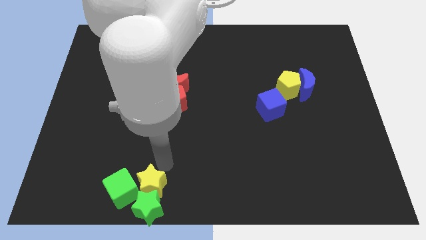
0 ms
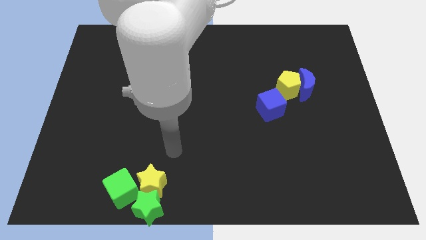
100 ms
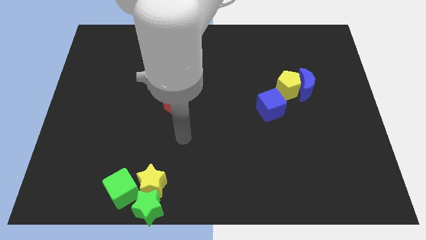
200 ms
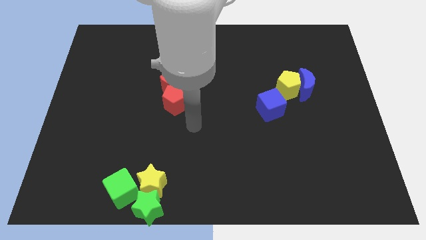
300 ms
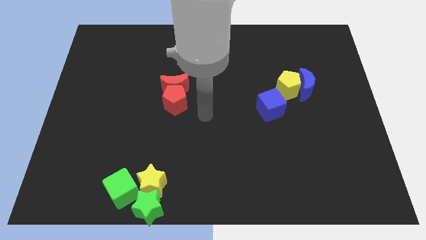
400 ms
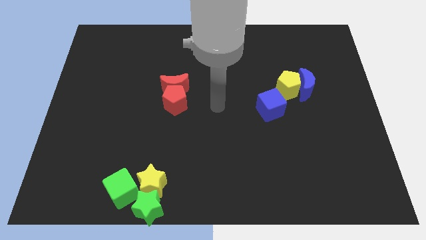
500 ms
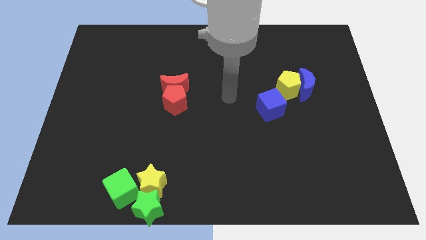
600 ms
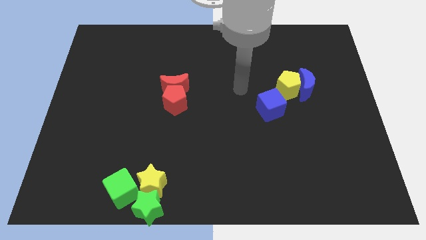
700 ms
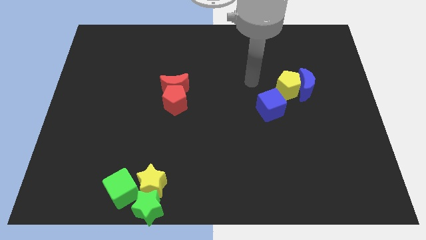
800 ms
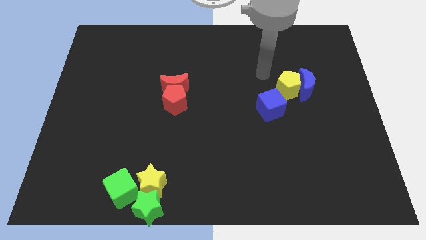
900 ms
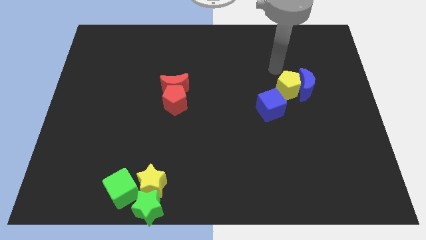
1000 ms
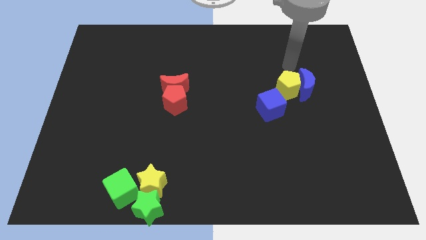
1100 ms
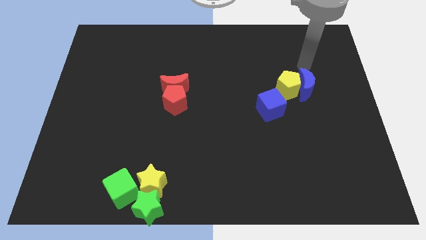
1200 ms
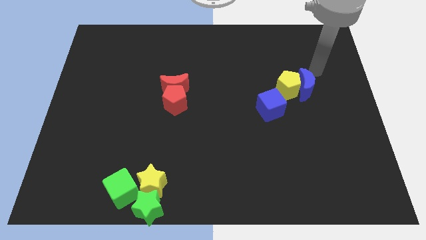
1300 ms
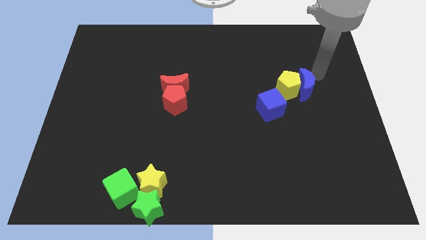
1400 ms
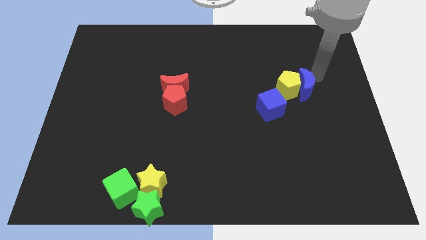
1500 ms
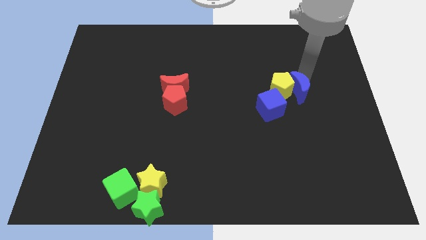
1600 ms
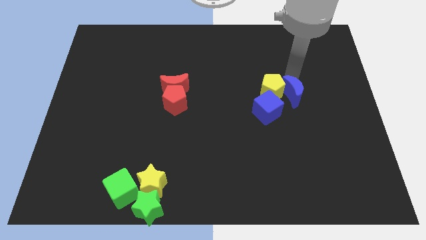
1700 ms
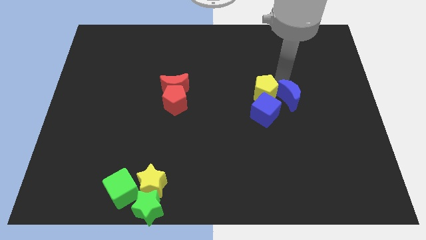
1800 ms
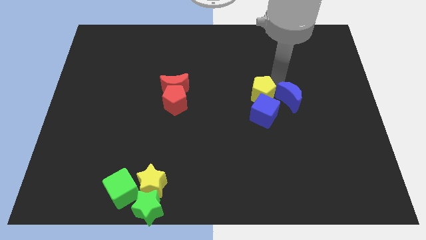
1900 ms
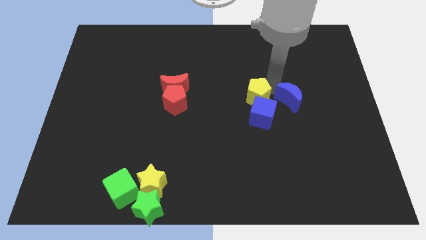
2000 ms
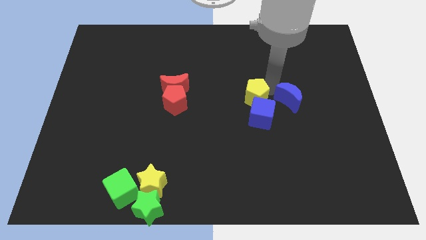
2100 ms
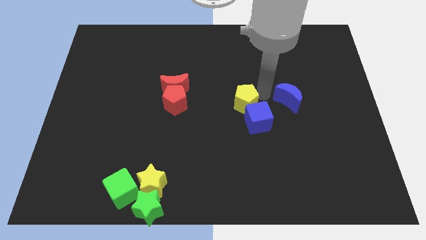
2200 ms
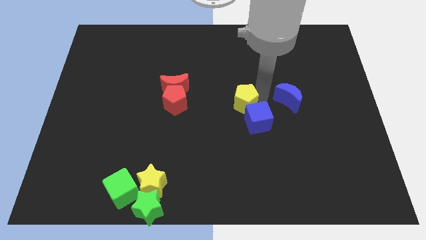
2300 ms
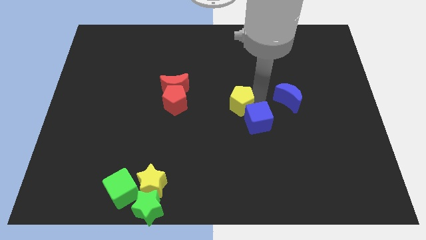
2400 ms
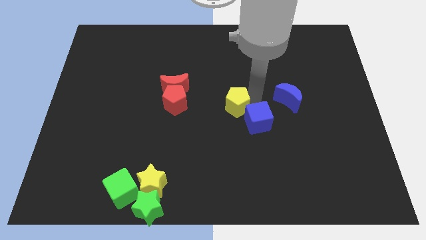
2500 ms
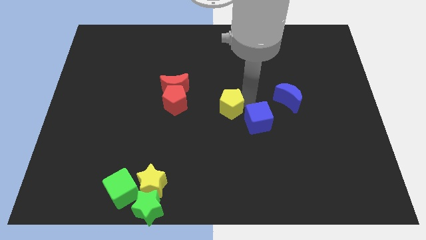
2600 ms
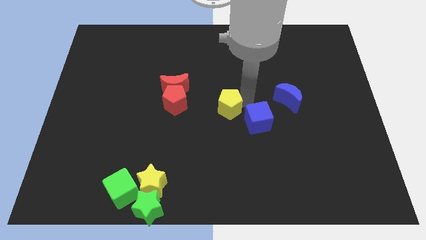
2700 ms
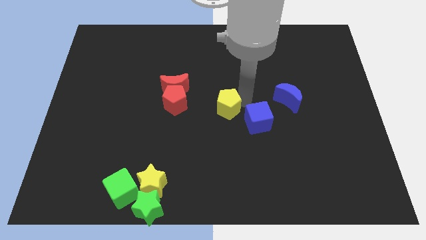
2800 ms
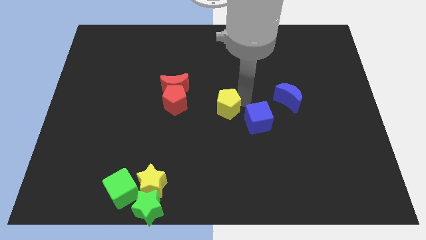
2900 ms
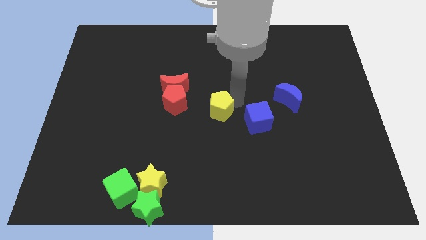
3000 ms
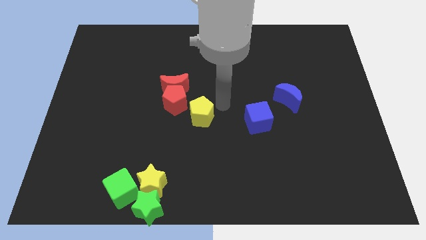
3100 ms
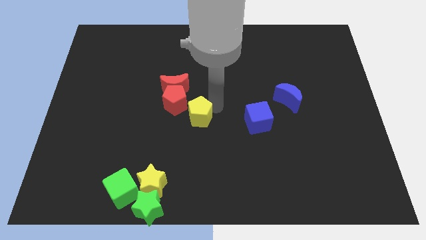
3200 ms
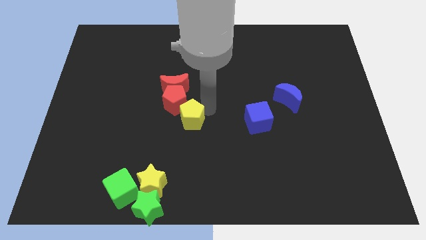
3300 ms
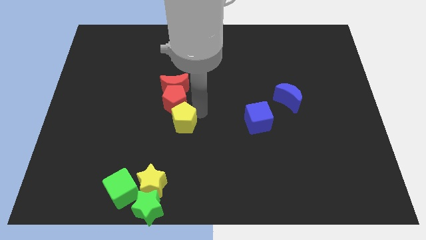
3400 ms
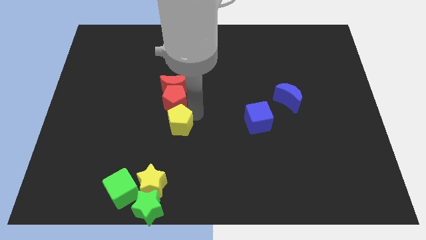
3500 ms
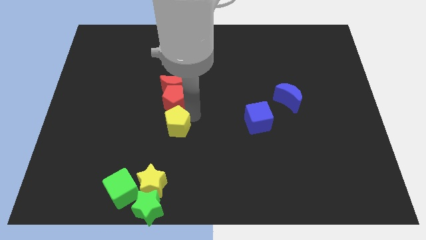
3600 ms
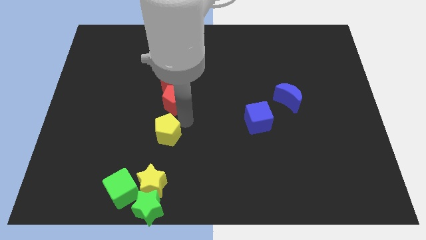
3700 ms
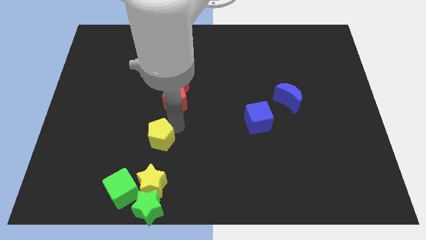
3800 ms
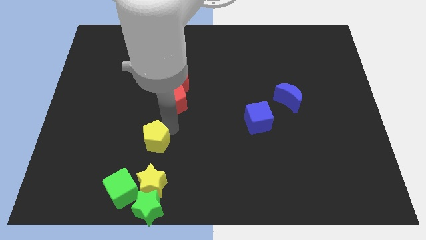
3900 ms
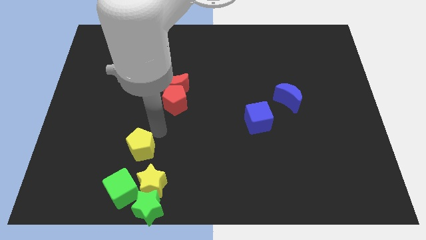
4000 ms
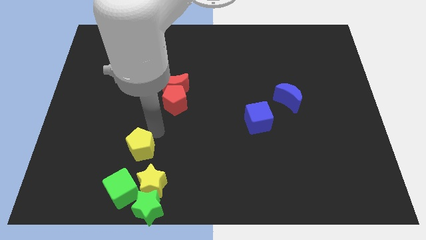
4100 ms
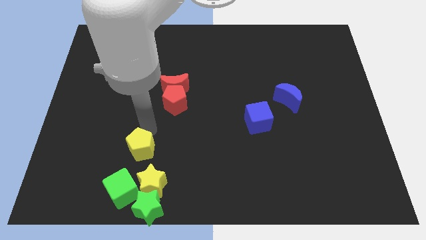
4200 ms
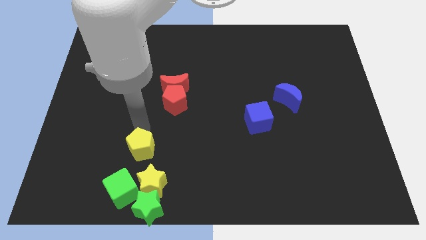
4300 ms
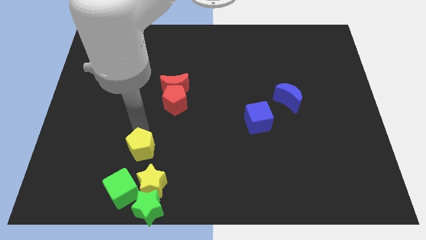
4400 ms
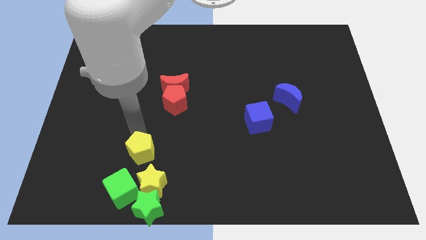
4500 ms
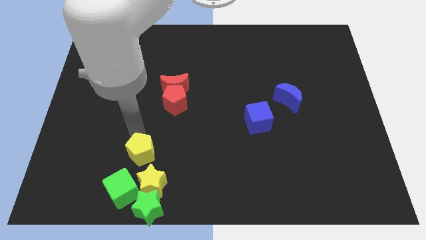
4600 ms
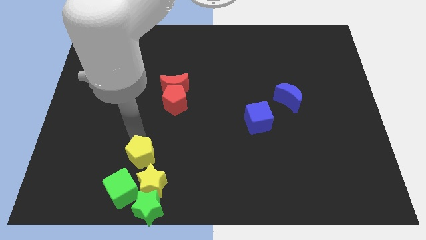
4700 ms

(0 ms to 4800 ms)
slide the yellow pentagon towards the group of blocks

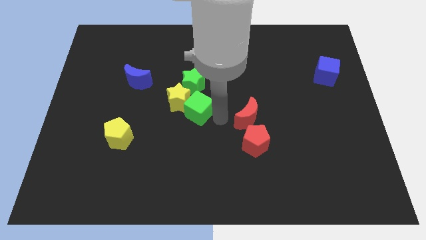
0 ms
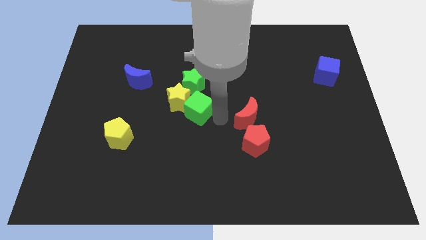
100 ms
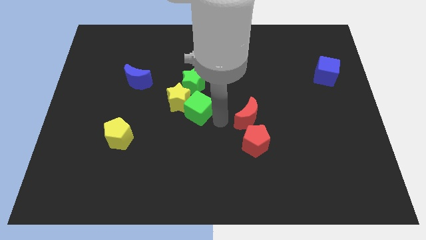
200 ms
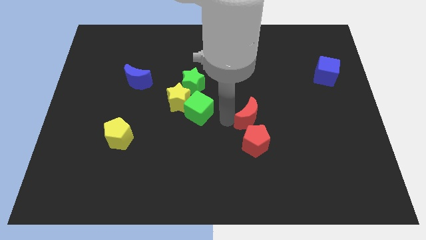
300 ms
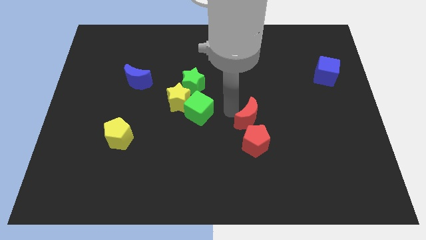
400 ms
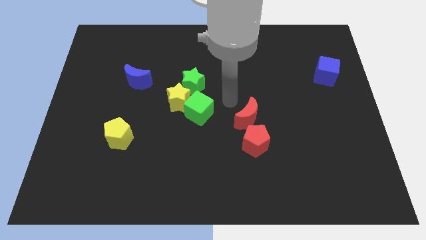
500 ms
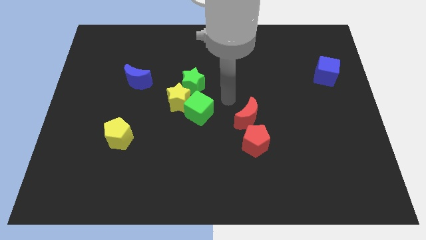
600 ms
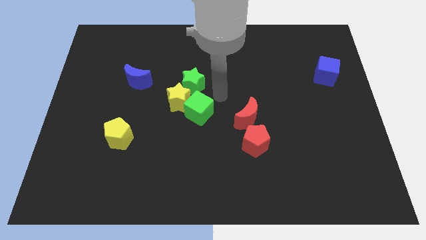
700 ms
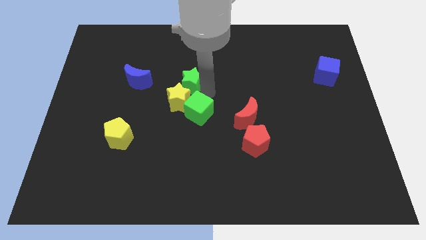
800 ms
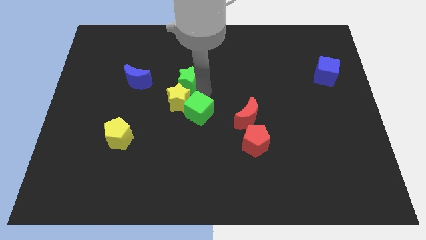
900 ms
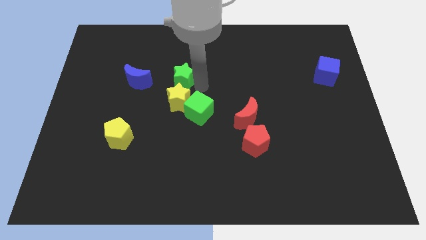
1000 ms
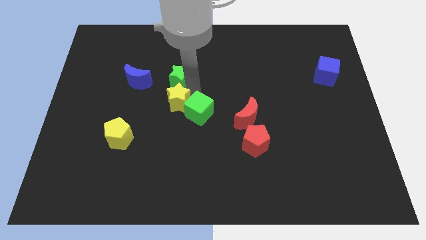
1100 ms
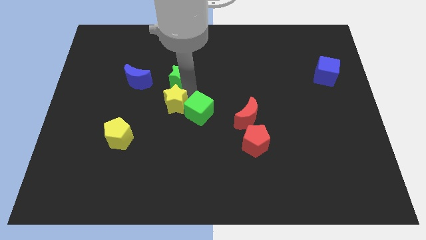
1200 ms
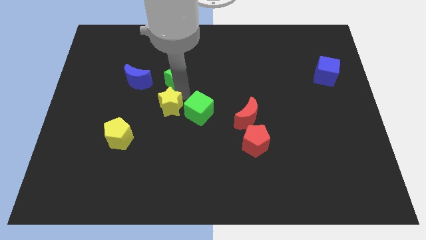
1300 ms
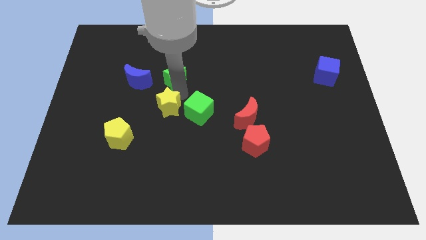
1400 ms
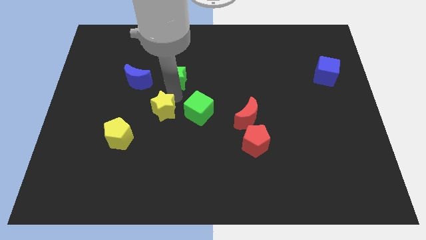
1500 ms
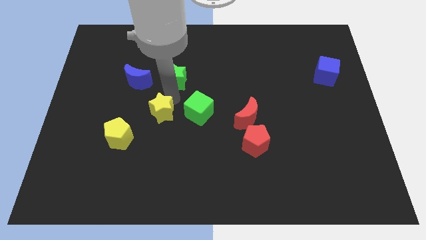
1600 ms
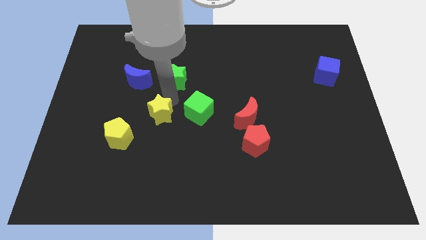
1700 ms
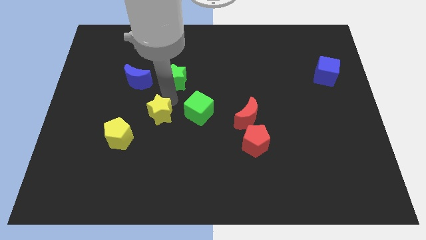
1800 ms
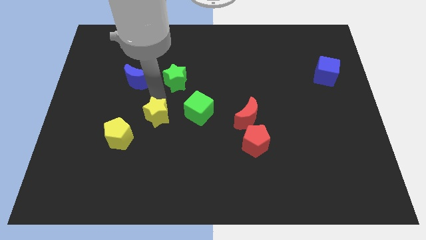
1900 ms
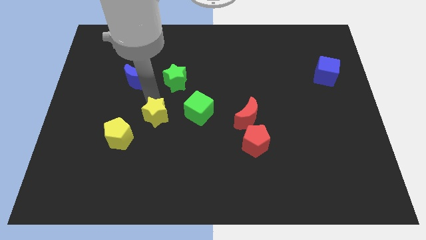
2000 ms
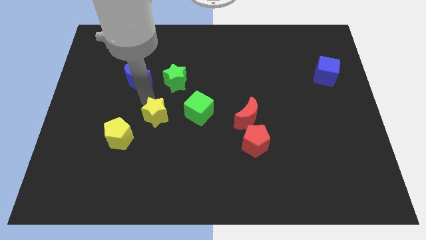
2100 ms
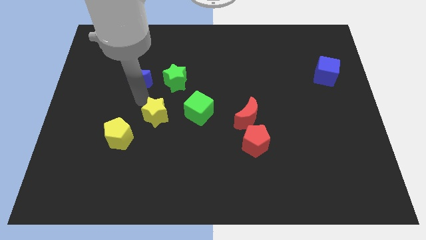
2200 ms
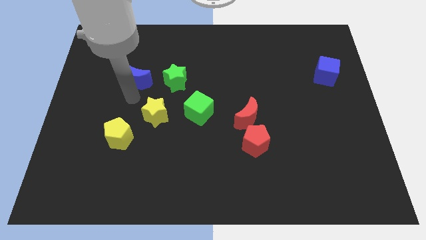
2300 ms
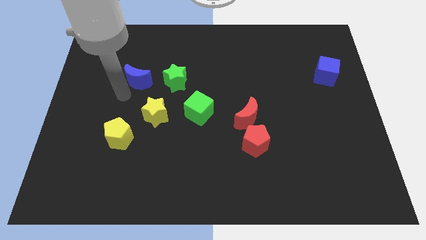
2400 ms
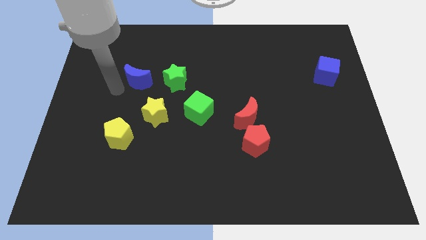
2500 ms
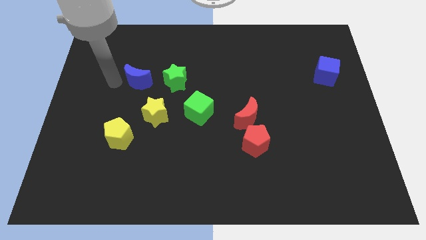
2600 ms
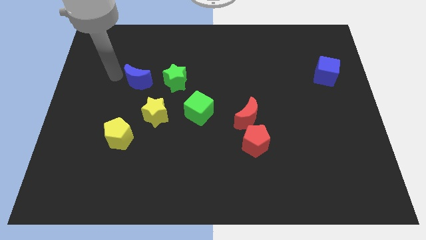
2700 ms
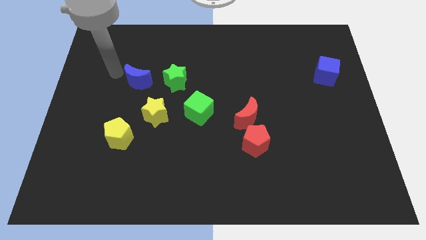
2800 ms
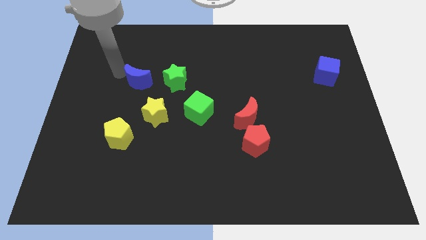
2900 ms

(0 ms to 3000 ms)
slightly push the yellow star to the bottom

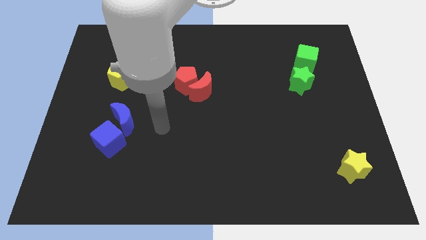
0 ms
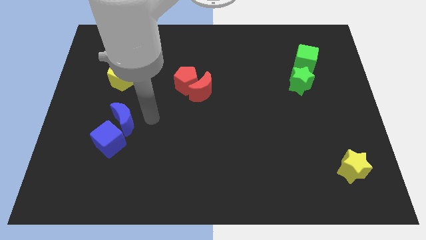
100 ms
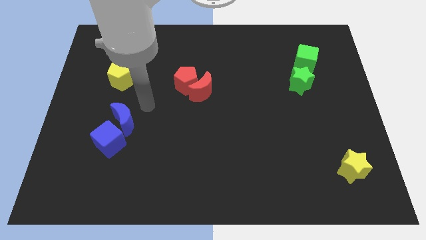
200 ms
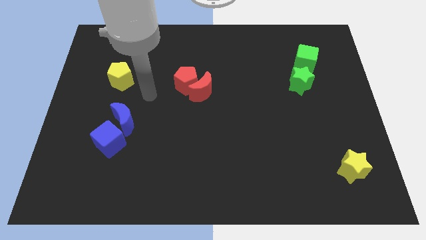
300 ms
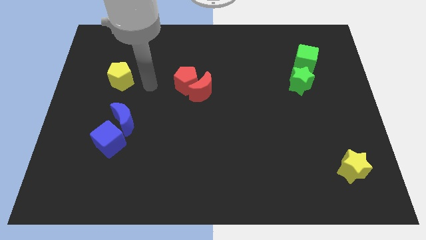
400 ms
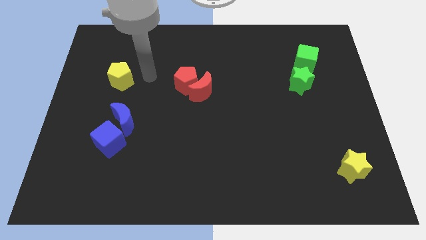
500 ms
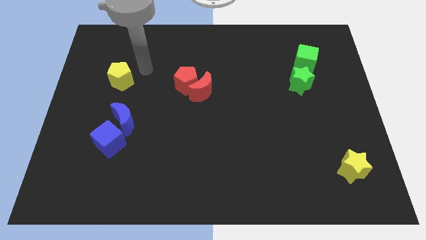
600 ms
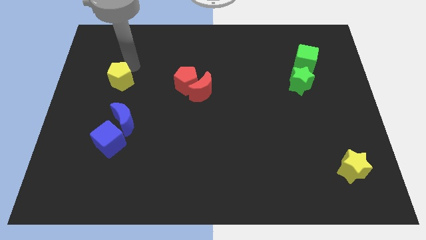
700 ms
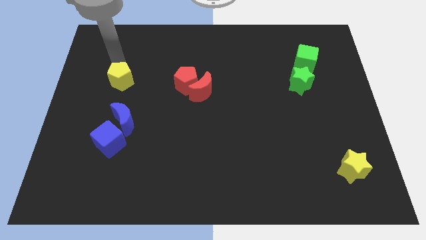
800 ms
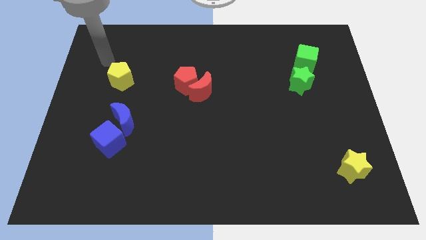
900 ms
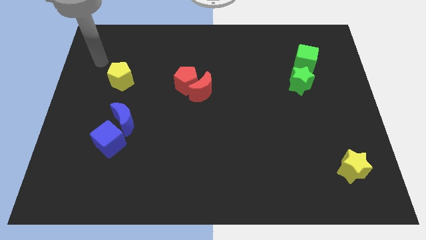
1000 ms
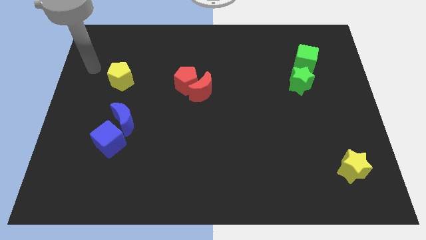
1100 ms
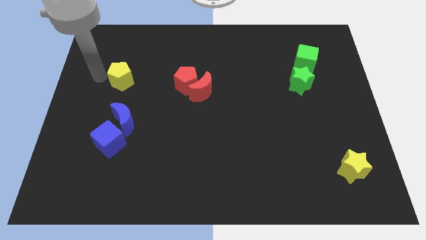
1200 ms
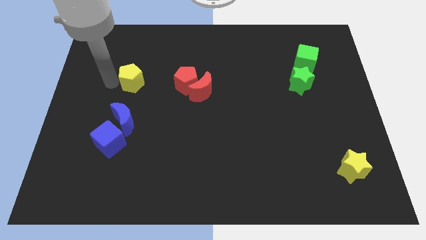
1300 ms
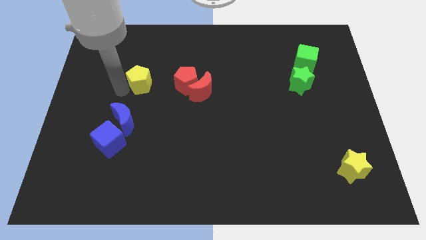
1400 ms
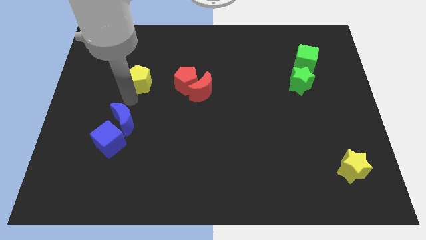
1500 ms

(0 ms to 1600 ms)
move the yellow pentagon slightly to the right
